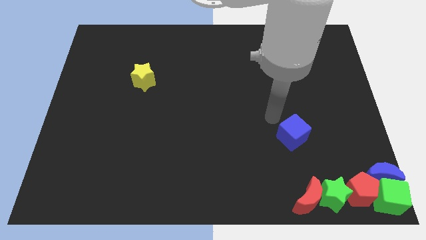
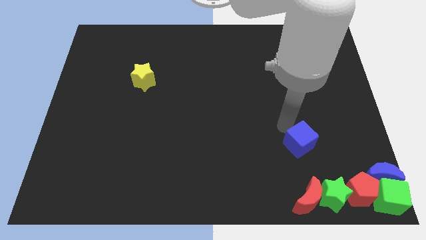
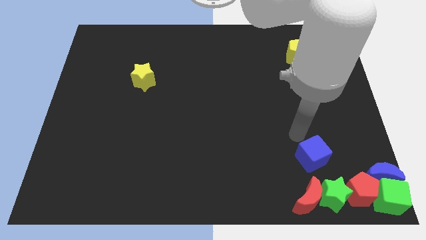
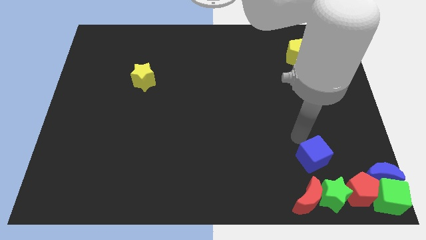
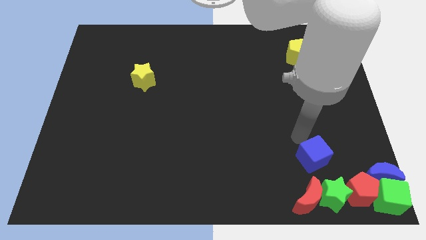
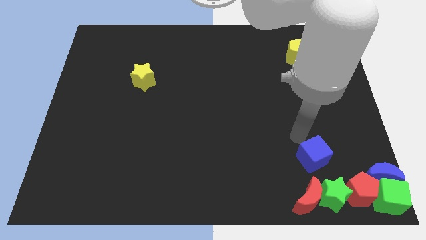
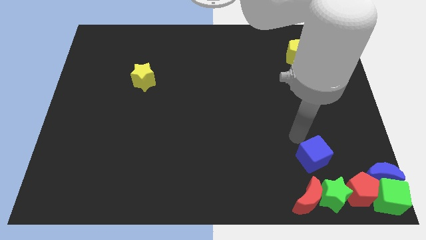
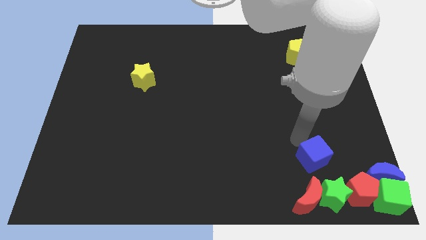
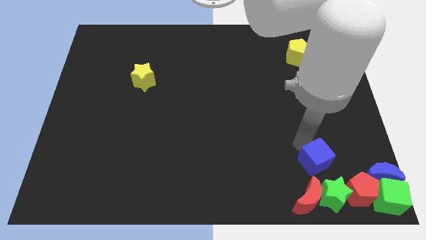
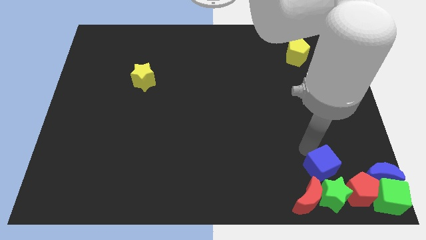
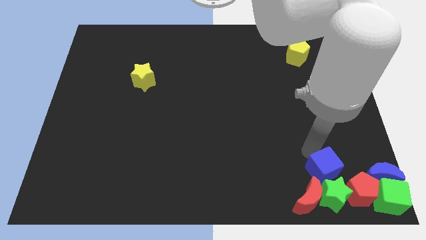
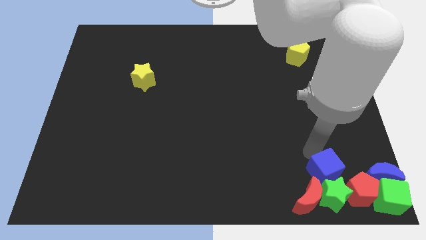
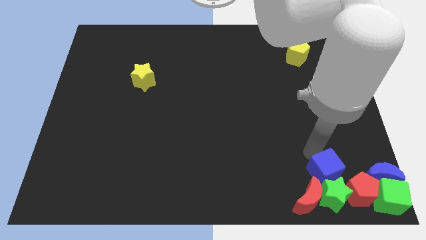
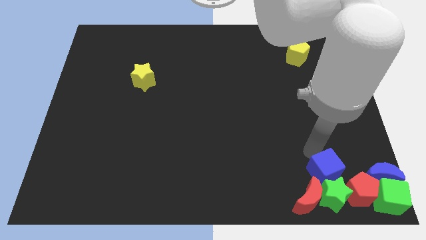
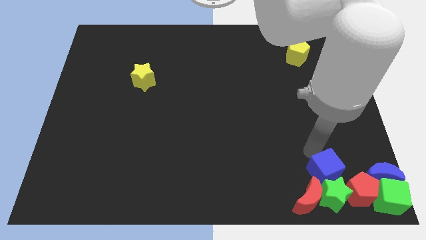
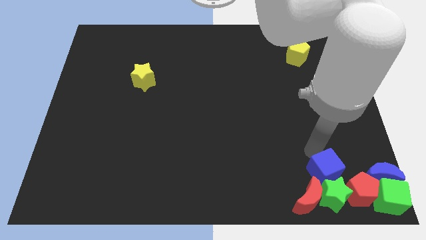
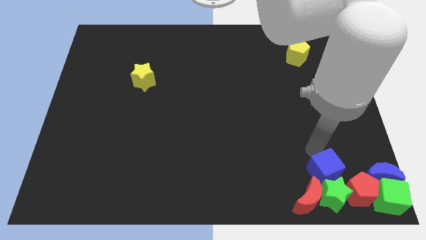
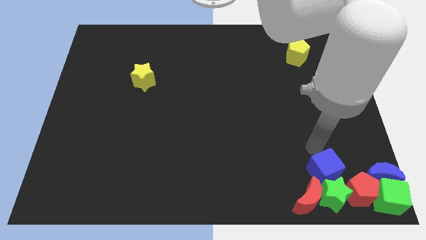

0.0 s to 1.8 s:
move blue cube above green star

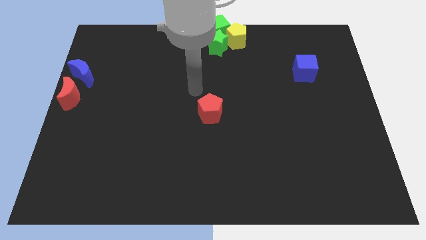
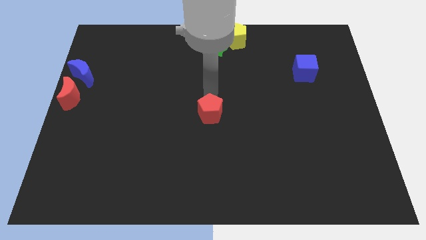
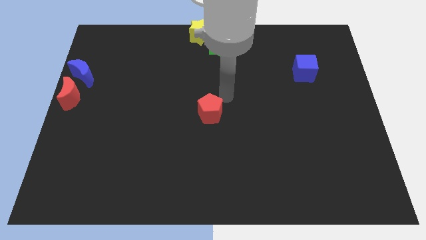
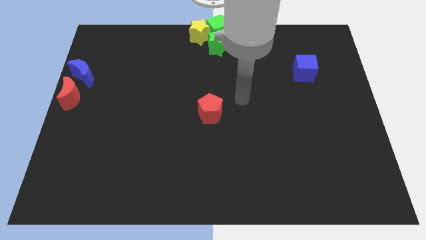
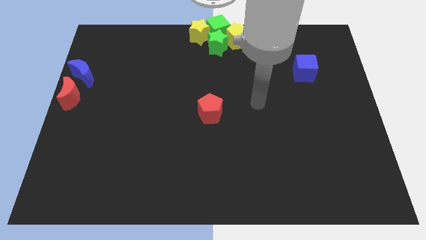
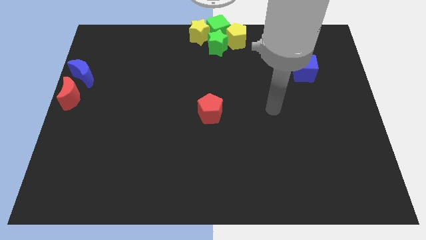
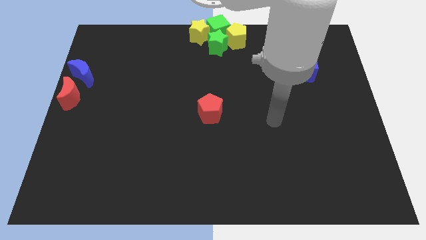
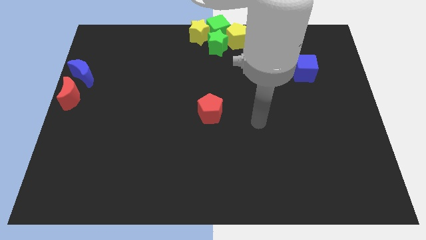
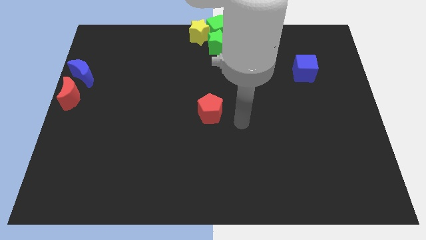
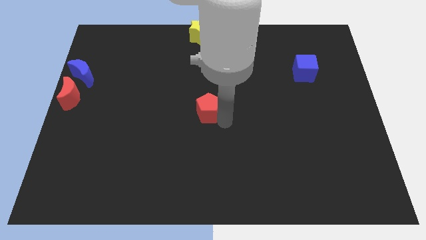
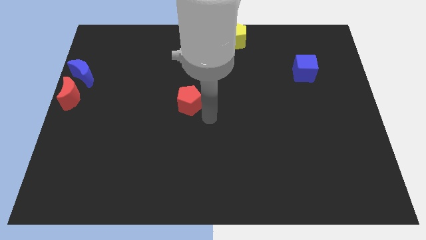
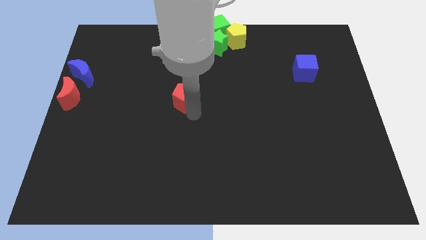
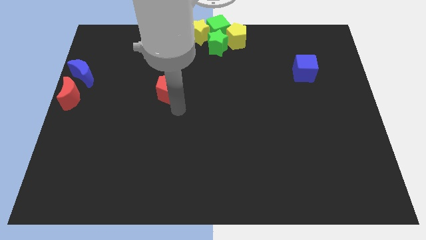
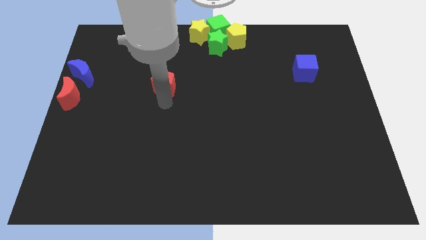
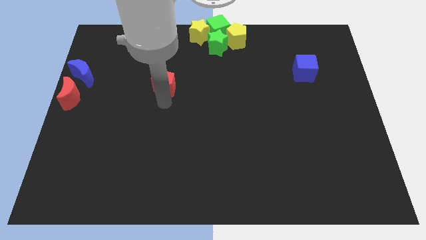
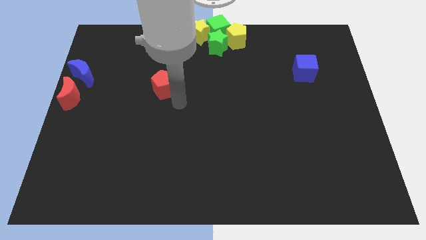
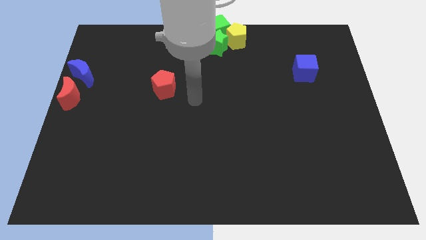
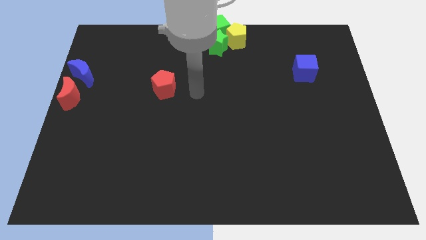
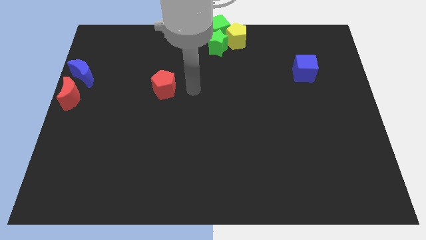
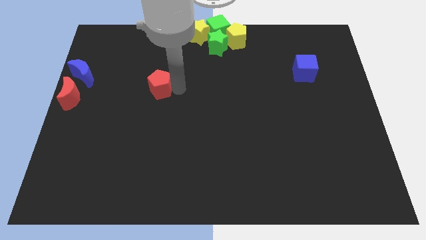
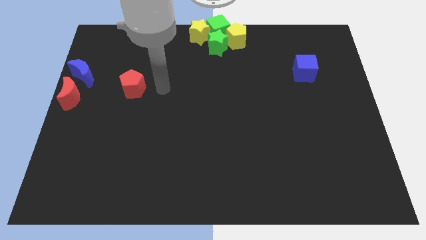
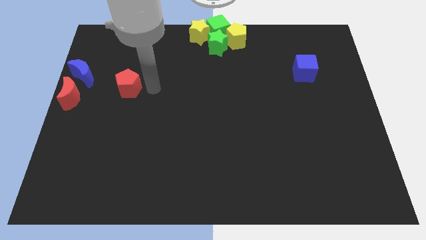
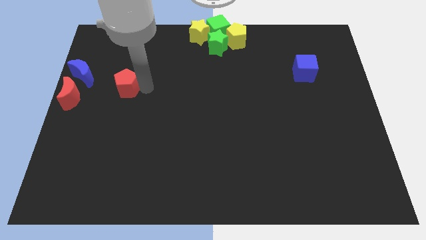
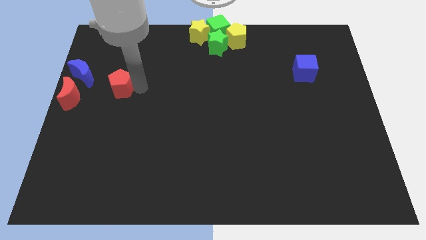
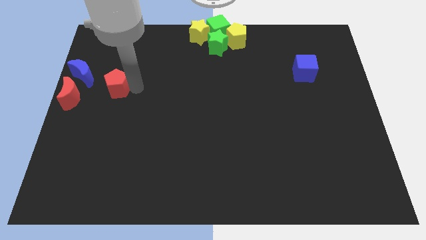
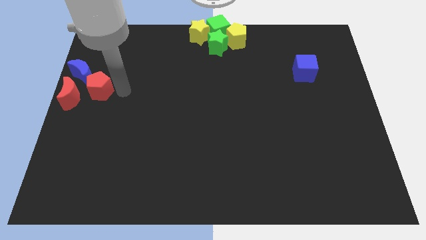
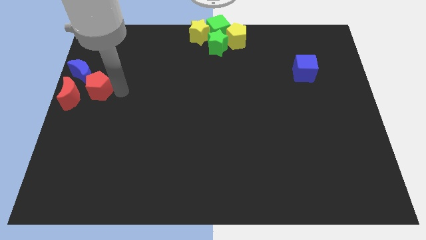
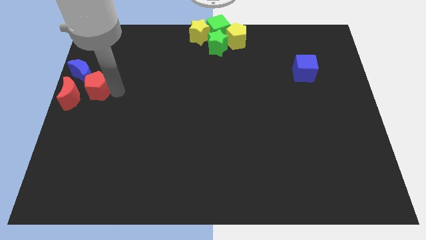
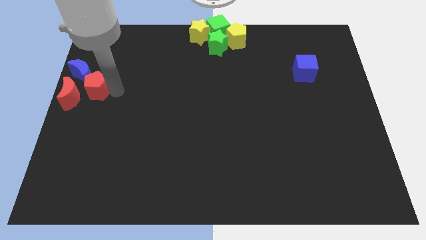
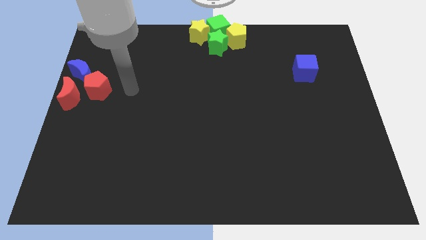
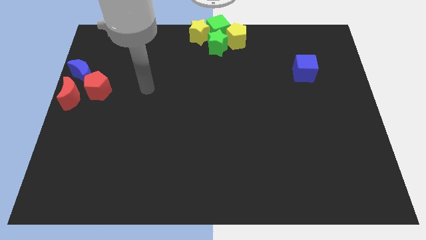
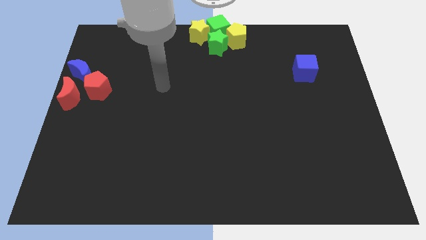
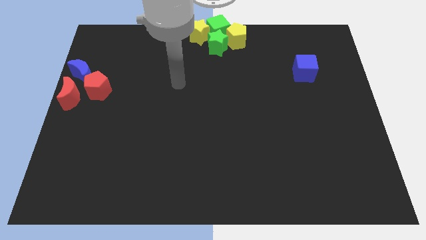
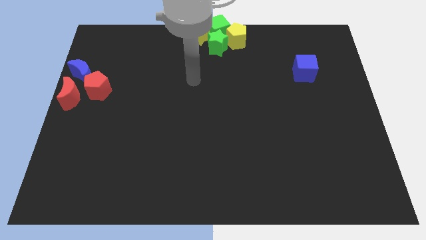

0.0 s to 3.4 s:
push the red pentagon towards the red moon

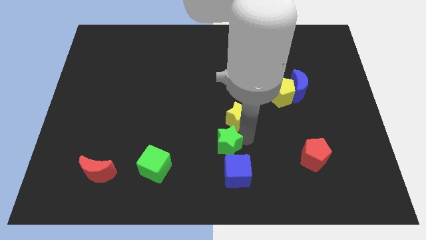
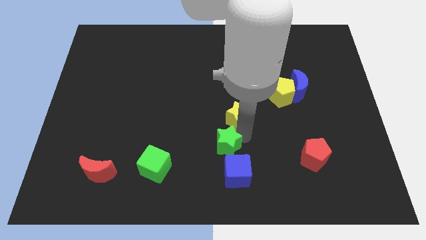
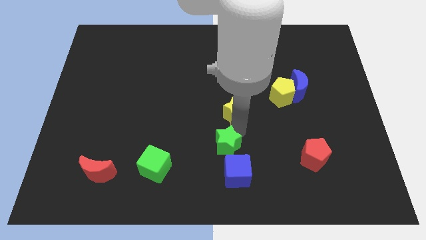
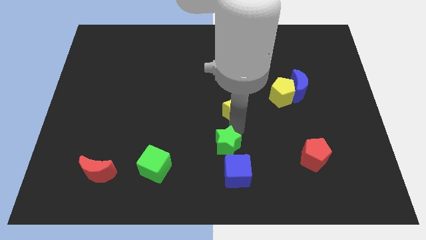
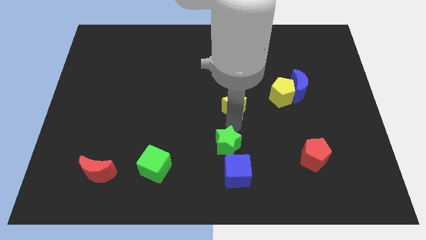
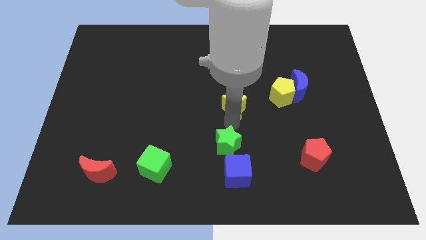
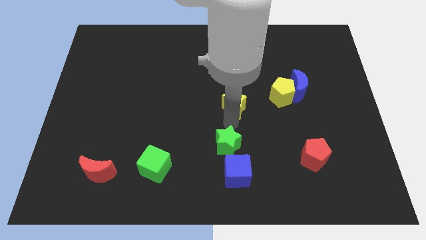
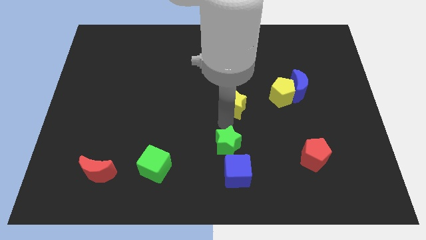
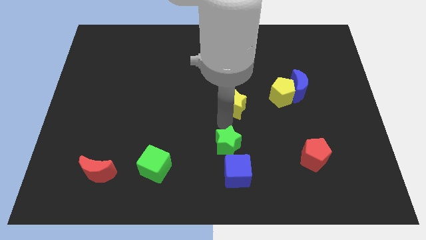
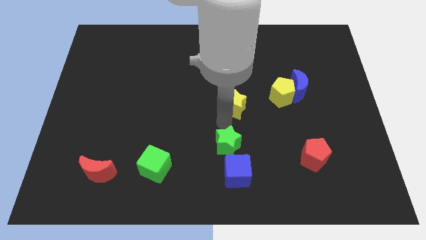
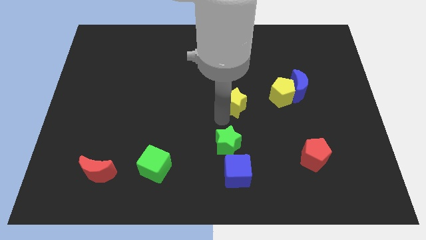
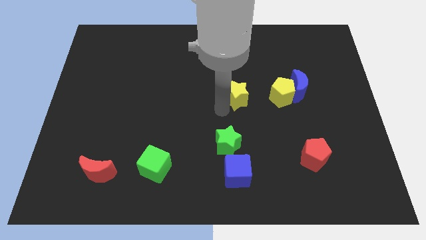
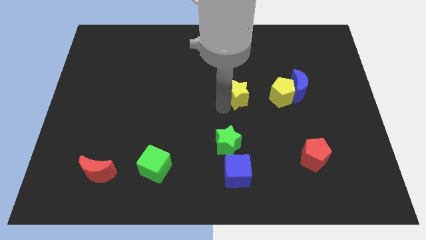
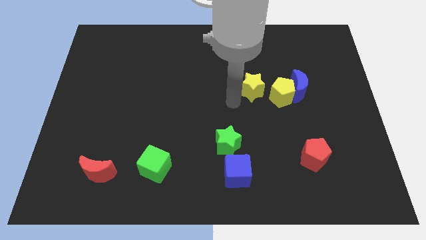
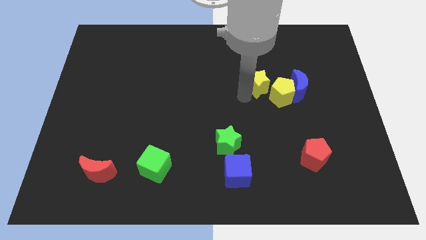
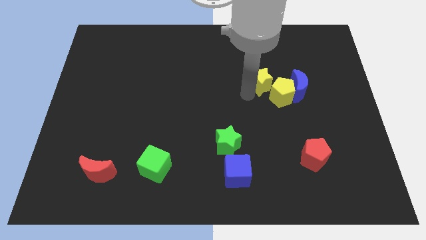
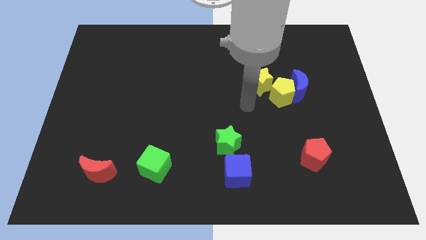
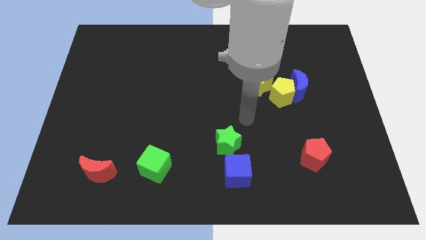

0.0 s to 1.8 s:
move the yellow star to the top left side of the yellow pentagon

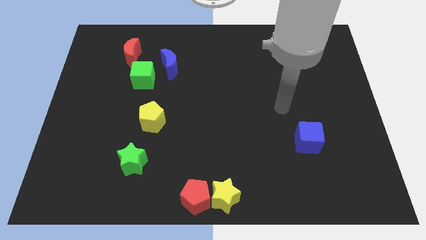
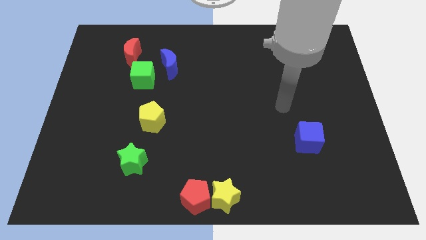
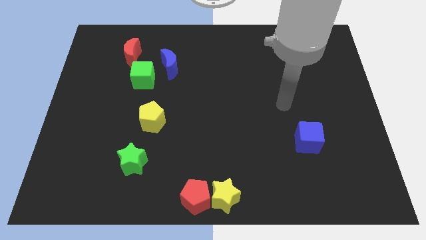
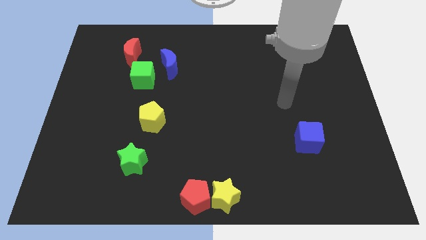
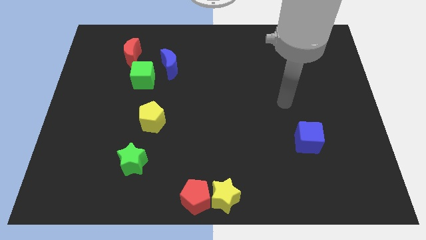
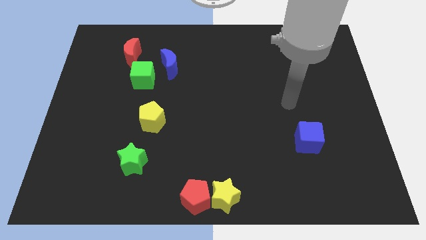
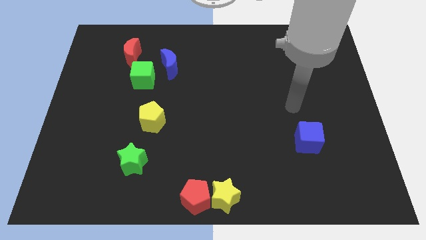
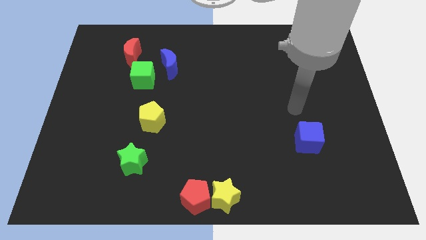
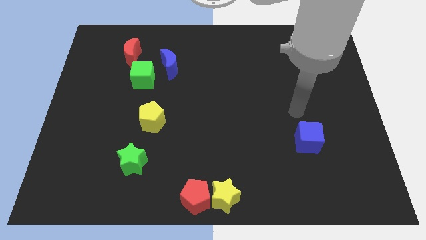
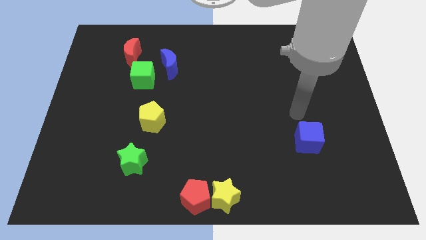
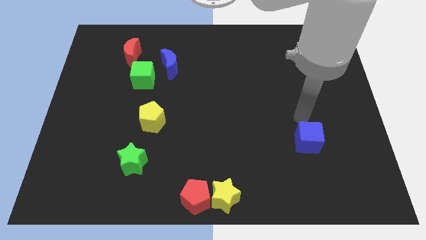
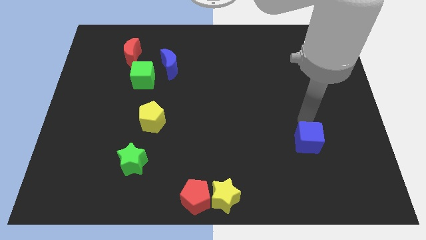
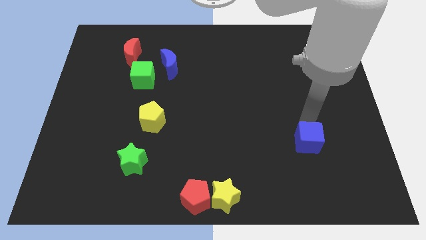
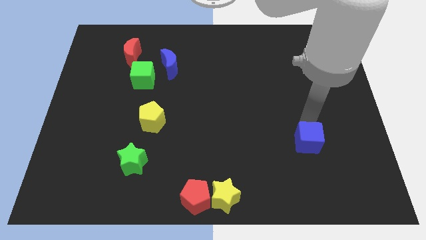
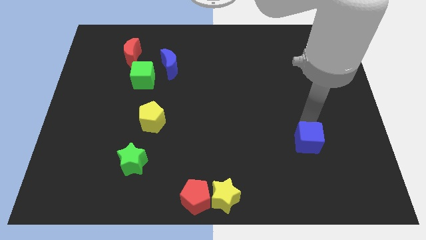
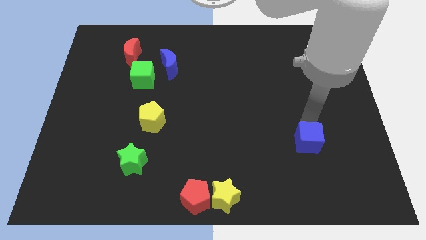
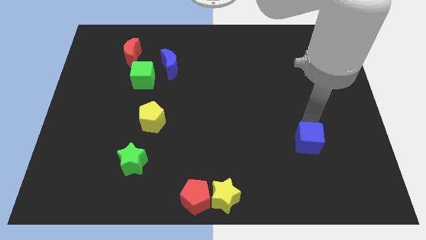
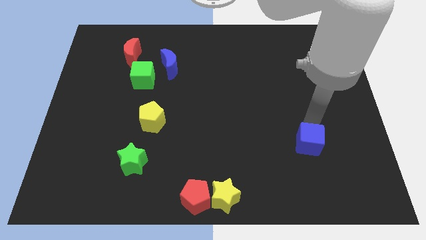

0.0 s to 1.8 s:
touch the top of blue cube
